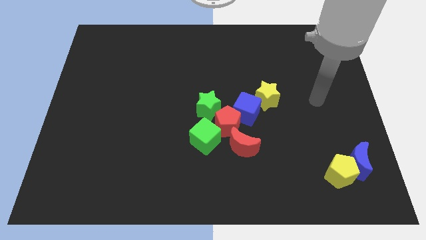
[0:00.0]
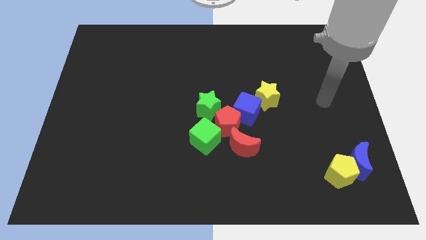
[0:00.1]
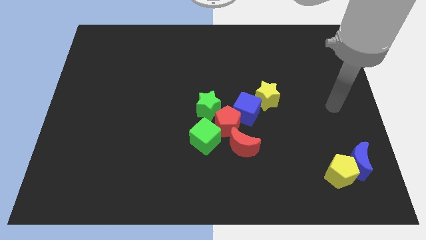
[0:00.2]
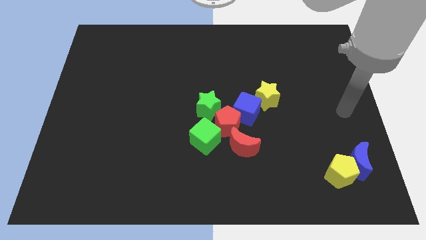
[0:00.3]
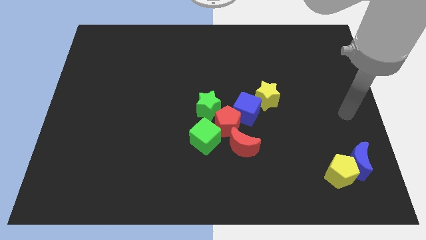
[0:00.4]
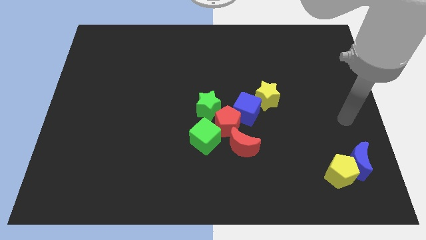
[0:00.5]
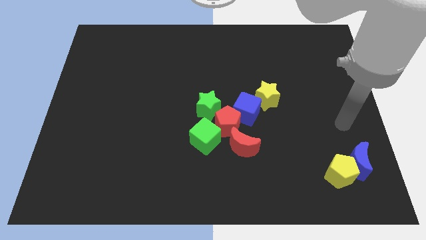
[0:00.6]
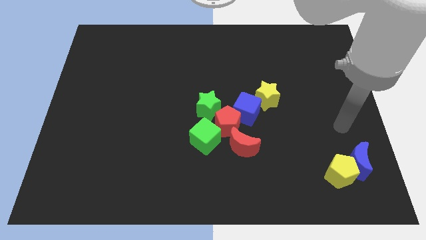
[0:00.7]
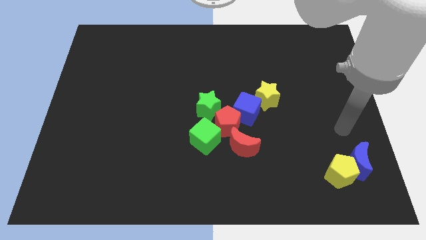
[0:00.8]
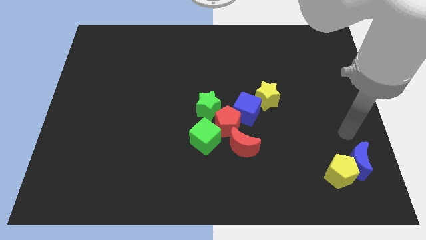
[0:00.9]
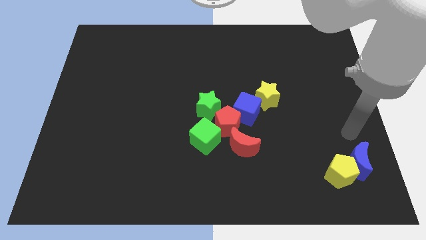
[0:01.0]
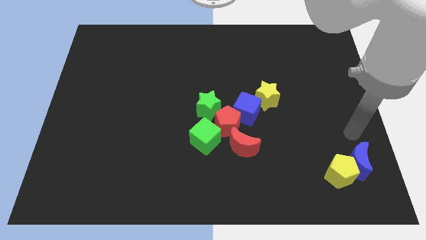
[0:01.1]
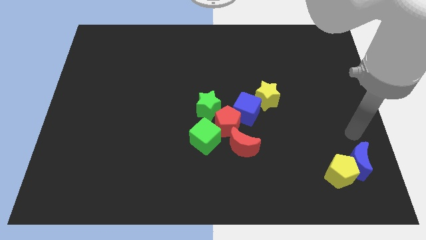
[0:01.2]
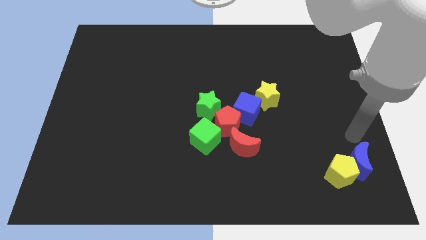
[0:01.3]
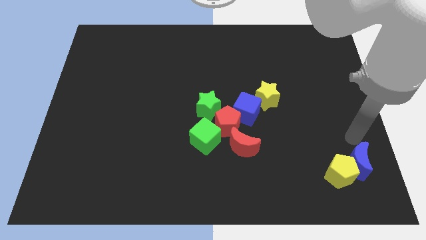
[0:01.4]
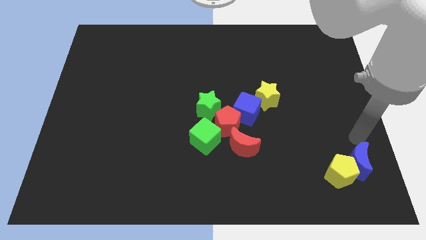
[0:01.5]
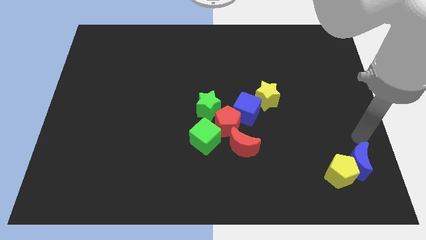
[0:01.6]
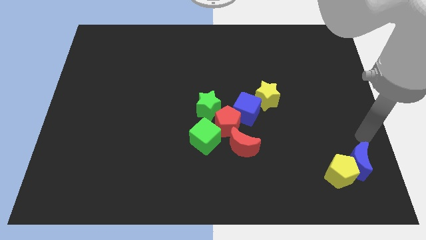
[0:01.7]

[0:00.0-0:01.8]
point your hand at the top side of the blue moon

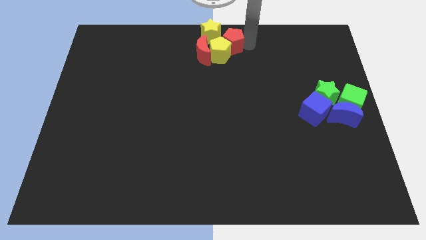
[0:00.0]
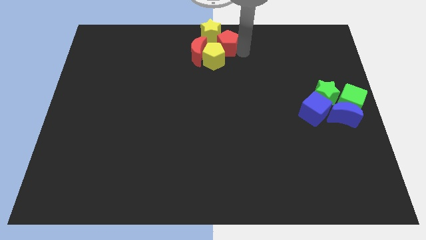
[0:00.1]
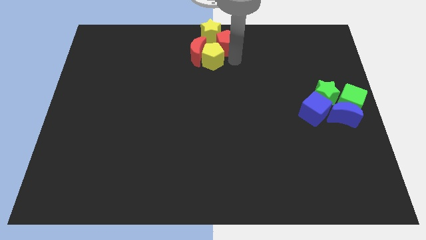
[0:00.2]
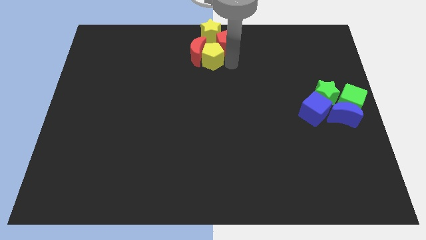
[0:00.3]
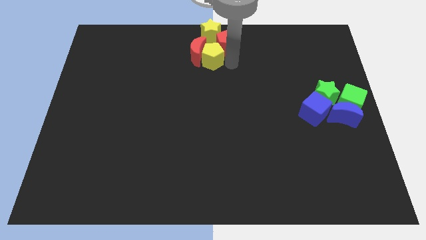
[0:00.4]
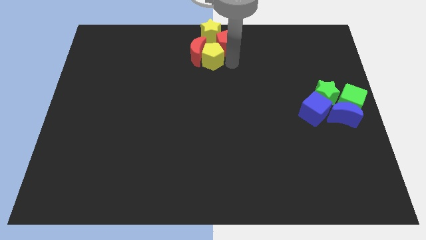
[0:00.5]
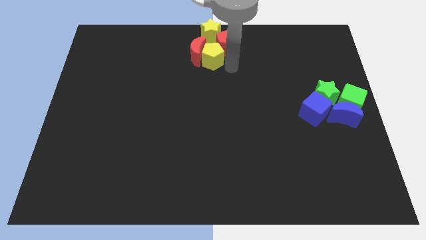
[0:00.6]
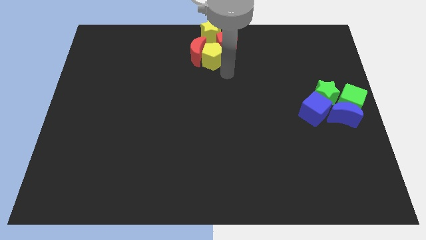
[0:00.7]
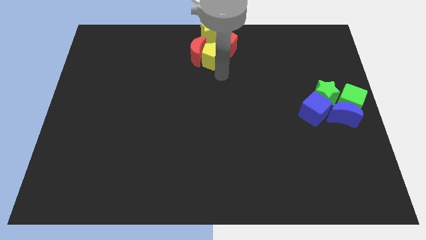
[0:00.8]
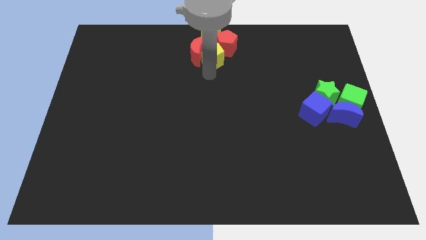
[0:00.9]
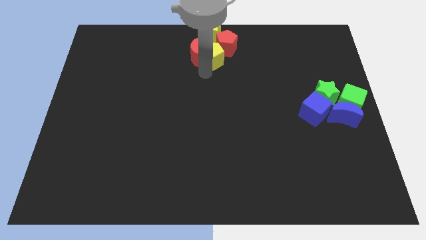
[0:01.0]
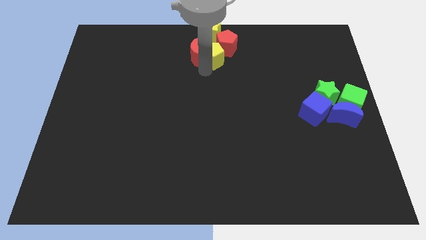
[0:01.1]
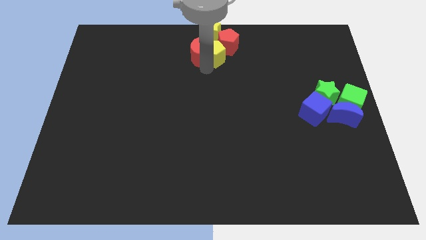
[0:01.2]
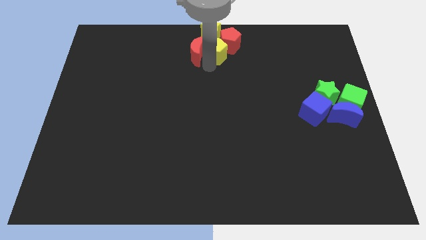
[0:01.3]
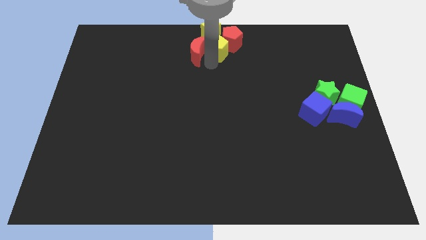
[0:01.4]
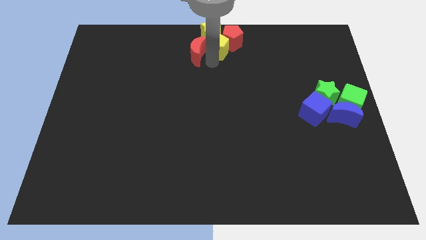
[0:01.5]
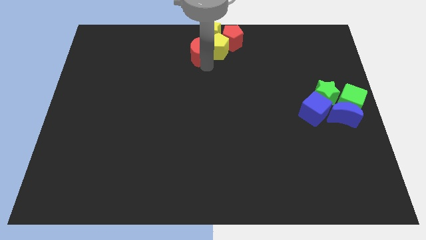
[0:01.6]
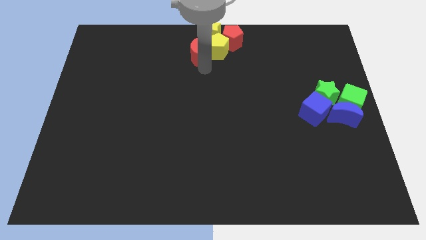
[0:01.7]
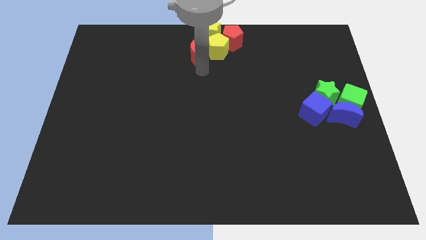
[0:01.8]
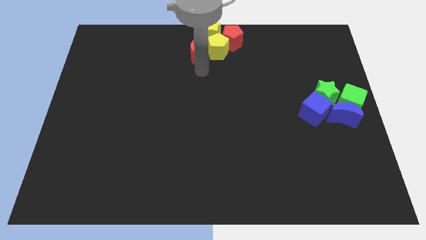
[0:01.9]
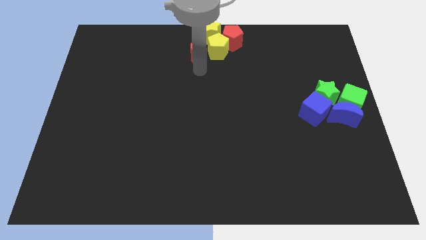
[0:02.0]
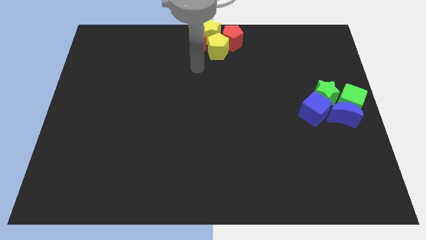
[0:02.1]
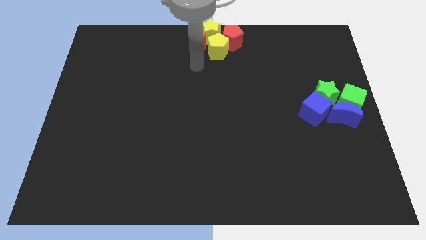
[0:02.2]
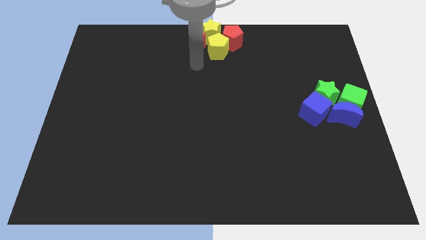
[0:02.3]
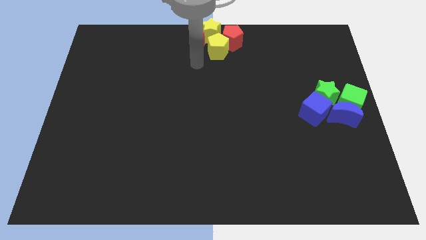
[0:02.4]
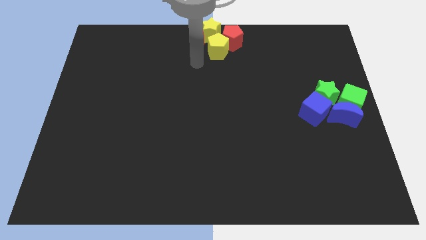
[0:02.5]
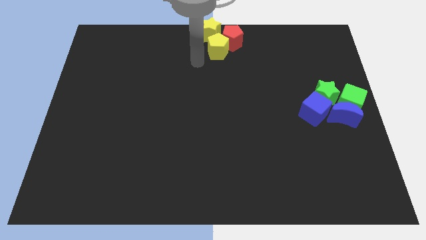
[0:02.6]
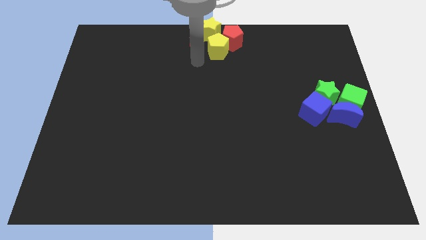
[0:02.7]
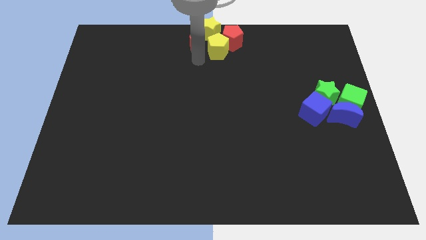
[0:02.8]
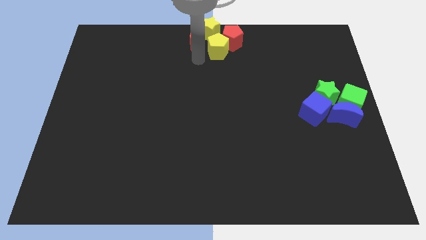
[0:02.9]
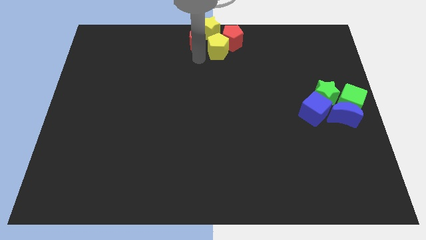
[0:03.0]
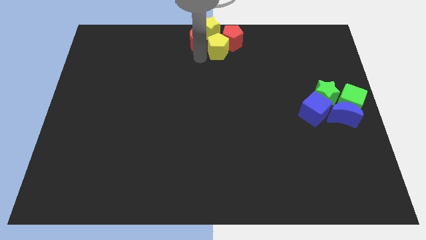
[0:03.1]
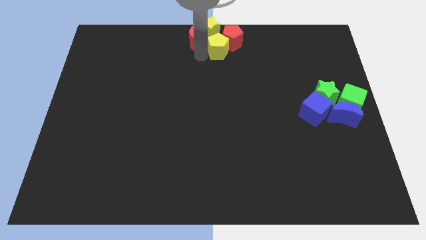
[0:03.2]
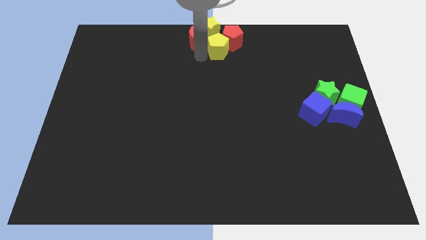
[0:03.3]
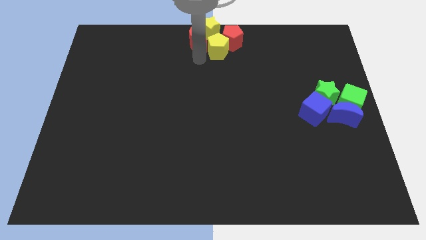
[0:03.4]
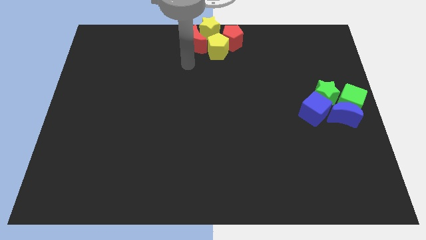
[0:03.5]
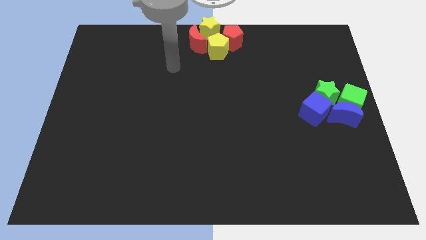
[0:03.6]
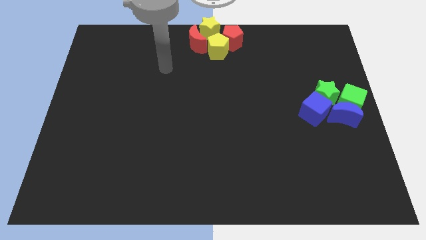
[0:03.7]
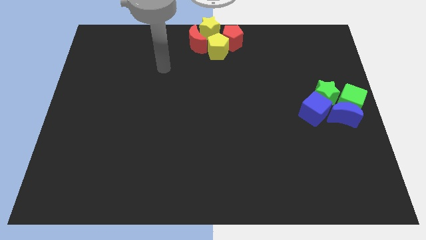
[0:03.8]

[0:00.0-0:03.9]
group up red and the yellow blocks at the top center of the board

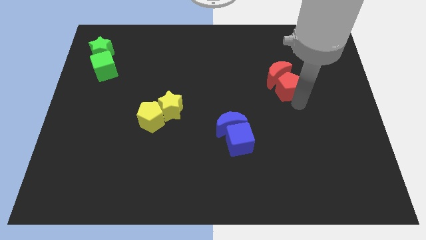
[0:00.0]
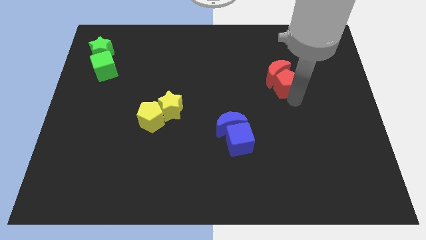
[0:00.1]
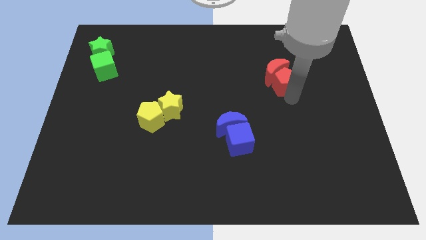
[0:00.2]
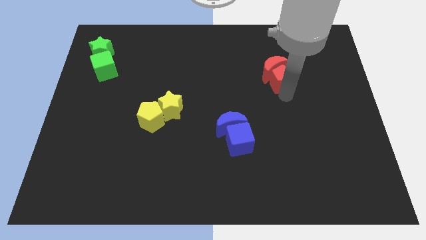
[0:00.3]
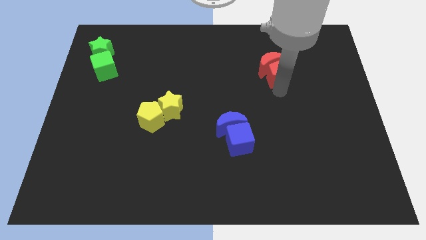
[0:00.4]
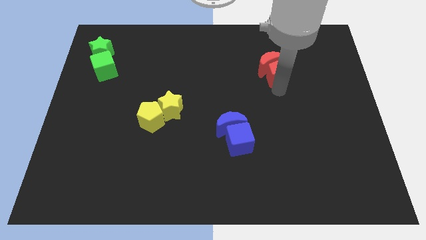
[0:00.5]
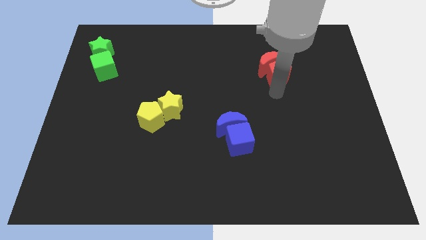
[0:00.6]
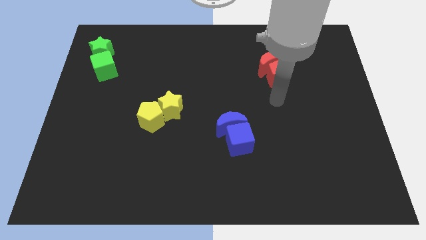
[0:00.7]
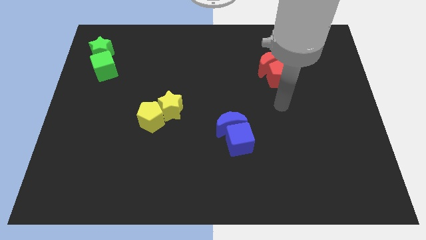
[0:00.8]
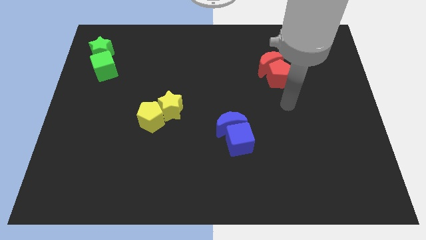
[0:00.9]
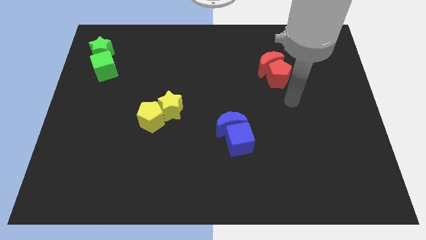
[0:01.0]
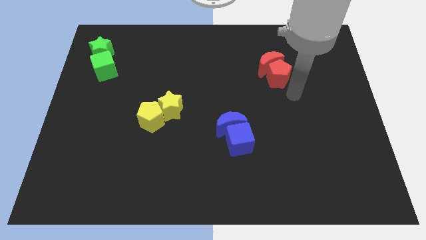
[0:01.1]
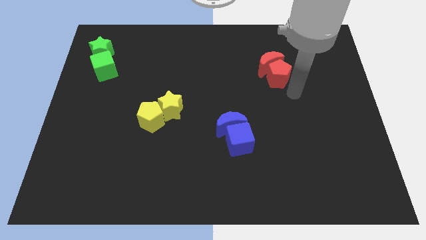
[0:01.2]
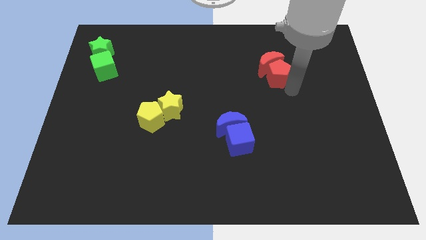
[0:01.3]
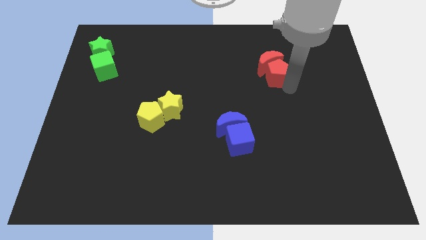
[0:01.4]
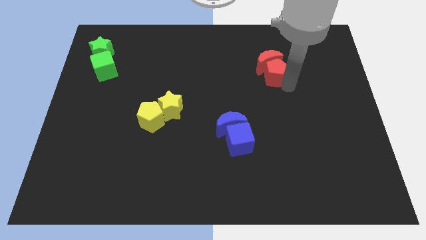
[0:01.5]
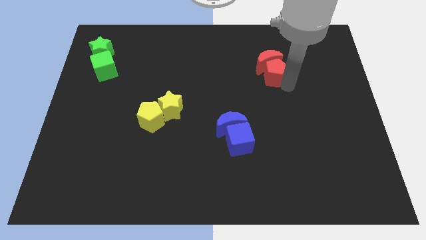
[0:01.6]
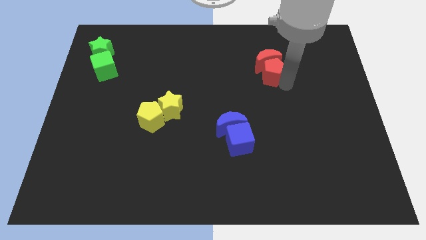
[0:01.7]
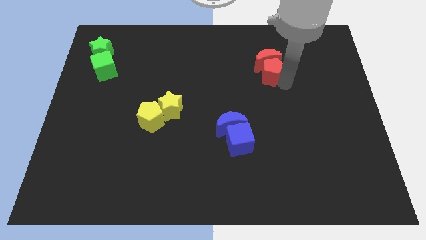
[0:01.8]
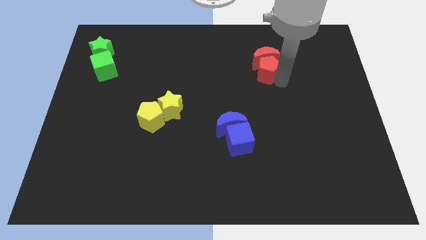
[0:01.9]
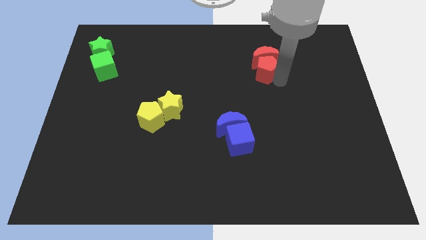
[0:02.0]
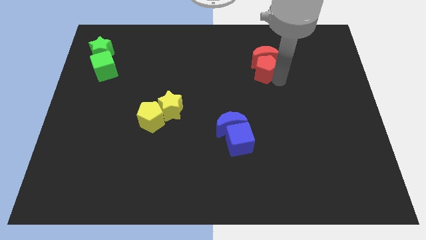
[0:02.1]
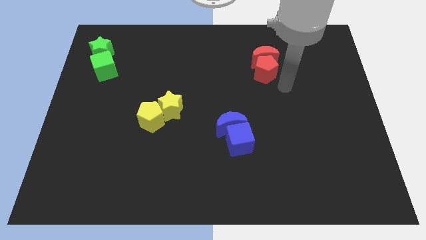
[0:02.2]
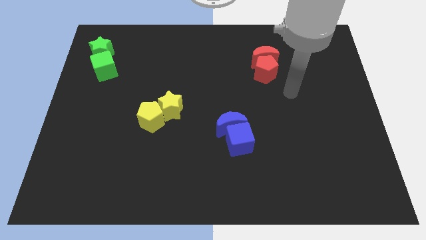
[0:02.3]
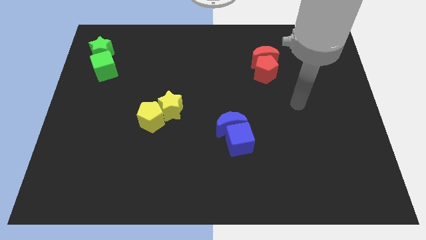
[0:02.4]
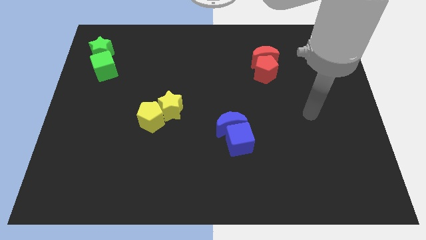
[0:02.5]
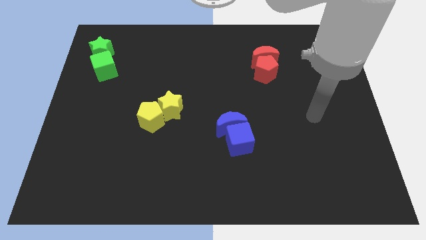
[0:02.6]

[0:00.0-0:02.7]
move red blocks diagonally above the blue blocks

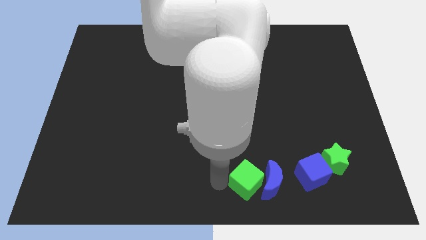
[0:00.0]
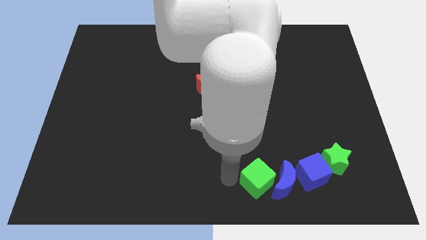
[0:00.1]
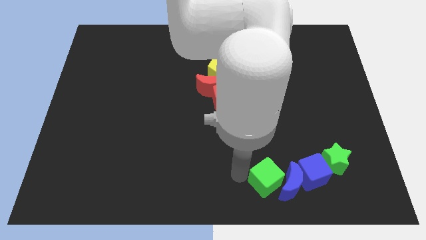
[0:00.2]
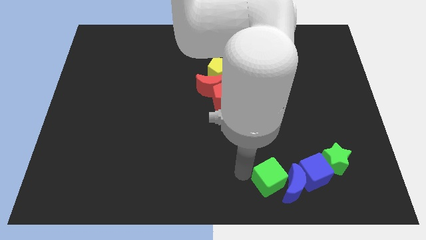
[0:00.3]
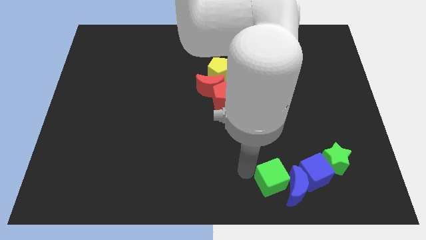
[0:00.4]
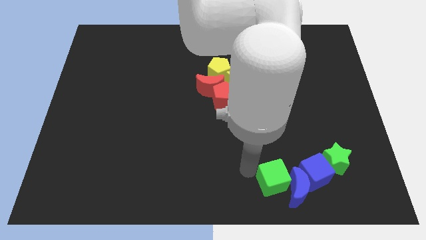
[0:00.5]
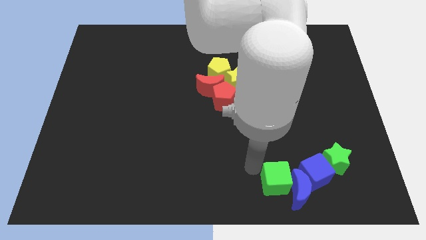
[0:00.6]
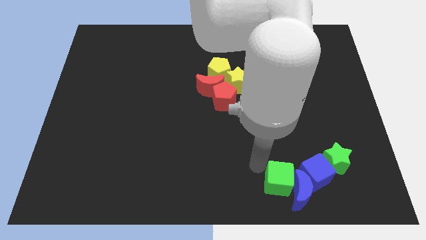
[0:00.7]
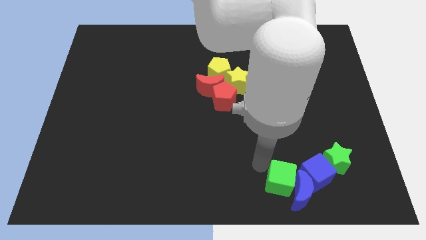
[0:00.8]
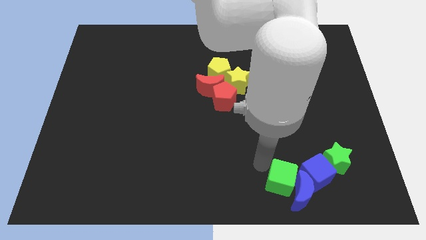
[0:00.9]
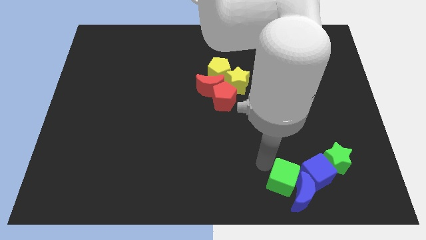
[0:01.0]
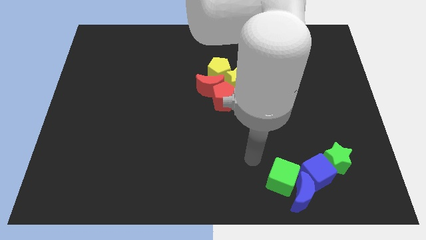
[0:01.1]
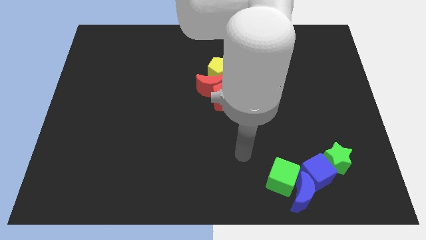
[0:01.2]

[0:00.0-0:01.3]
push green cube and blue cube so that both cube corners touch together
